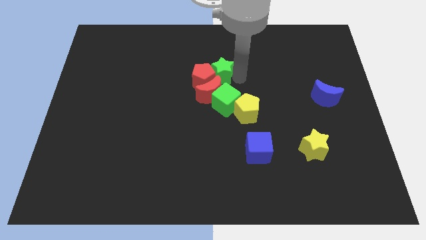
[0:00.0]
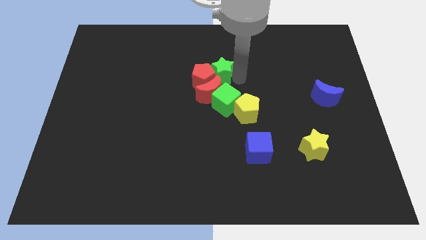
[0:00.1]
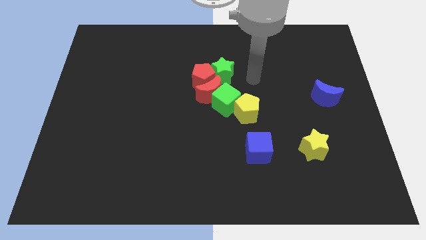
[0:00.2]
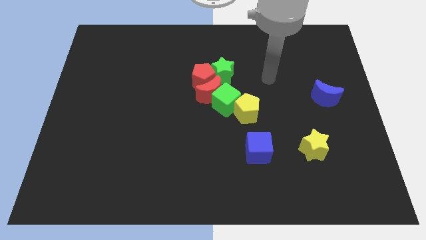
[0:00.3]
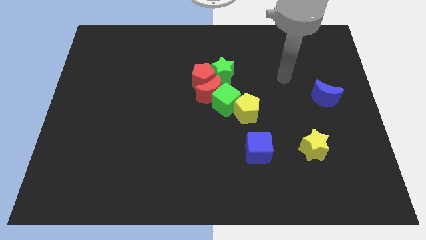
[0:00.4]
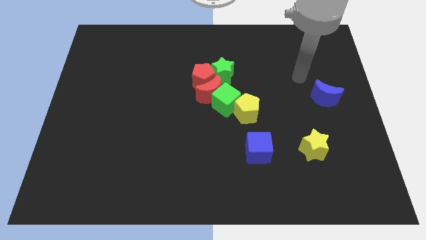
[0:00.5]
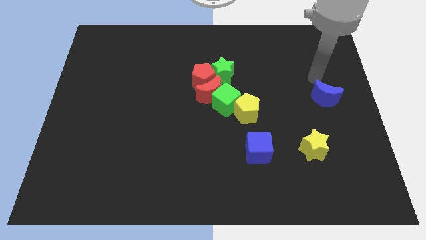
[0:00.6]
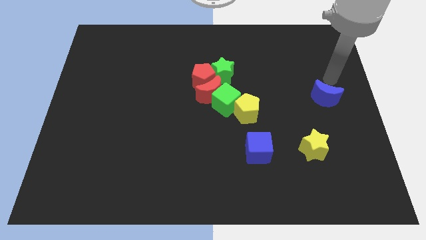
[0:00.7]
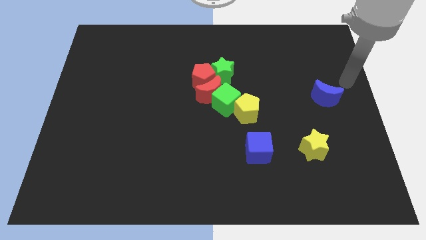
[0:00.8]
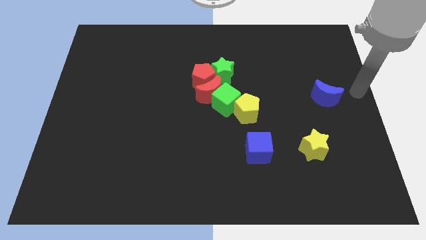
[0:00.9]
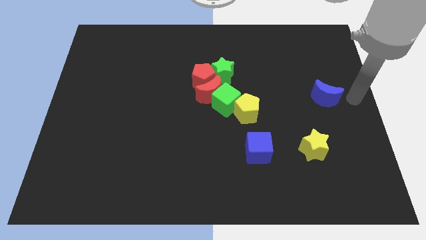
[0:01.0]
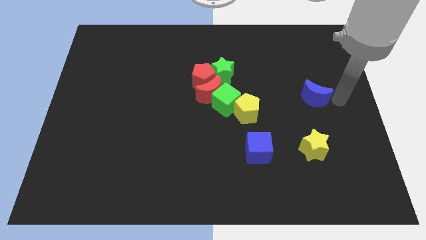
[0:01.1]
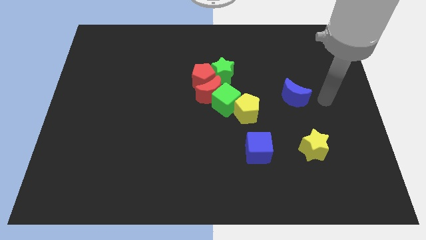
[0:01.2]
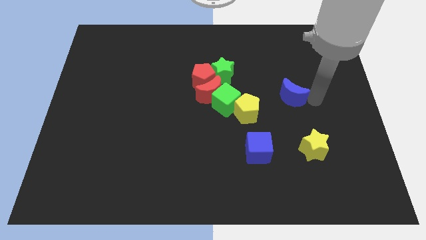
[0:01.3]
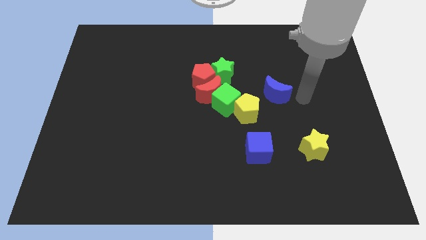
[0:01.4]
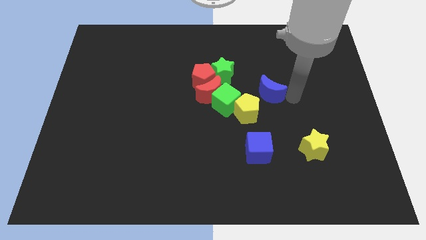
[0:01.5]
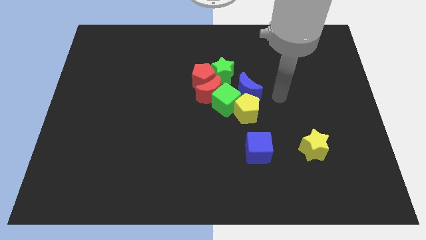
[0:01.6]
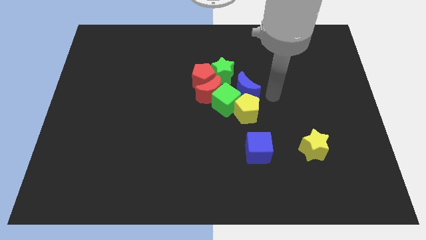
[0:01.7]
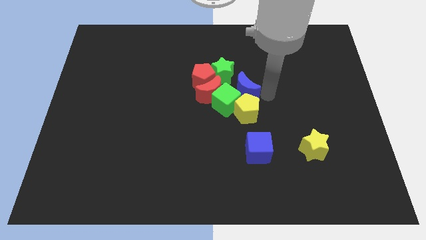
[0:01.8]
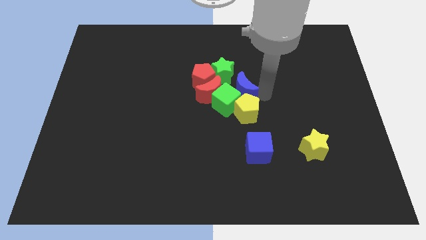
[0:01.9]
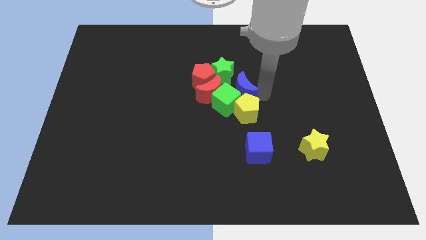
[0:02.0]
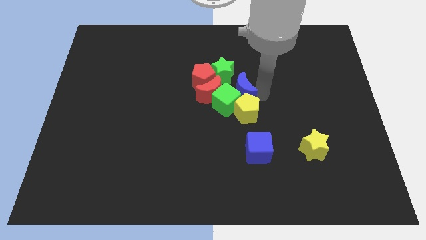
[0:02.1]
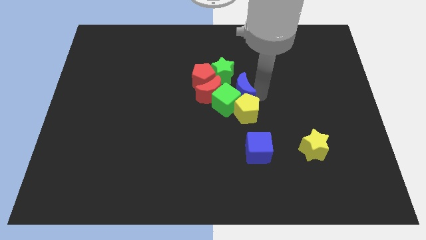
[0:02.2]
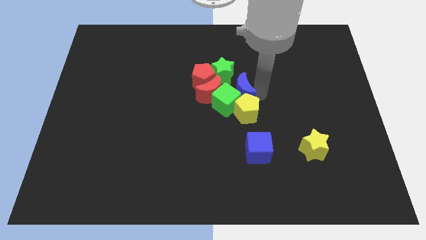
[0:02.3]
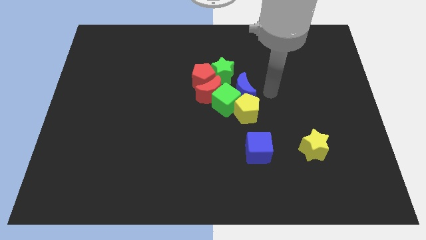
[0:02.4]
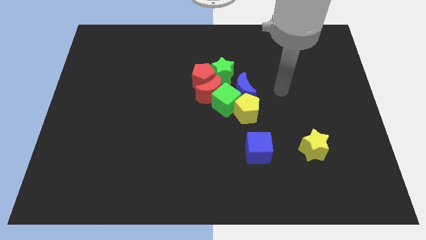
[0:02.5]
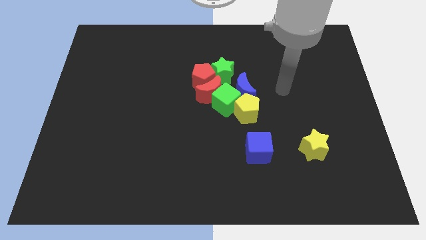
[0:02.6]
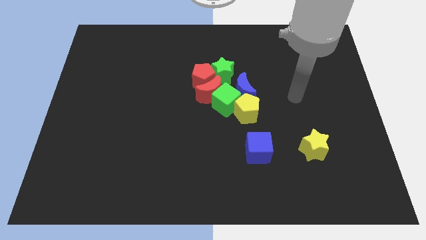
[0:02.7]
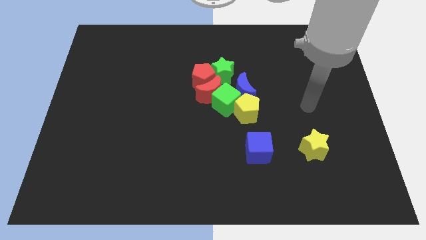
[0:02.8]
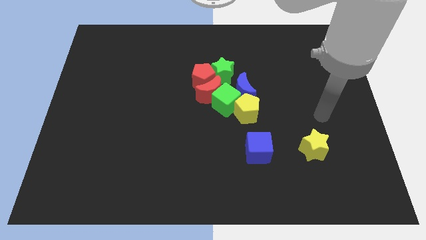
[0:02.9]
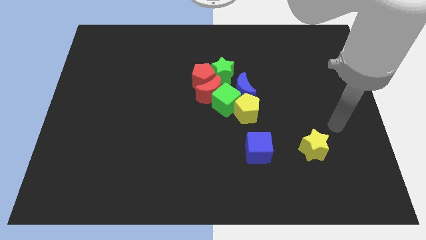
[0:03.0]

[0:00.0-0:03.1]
bring the blue crescent at the top side of the yellow pentagon

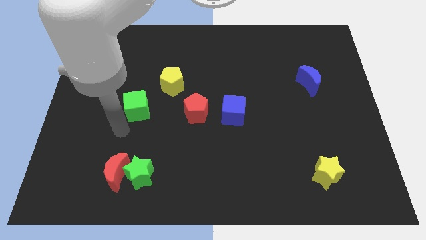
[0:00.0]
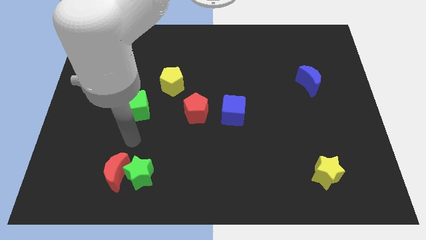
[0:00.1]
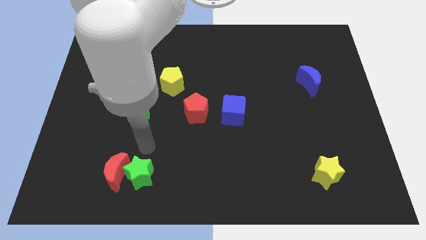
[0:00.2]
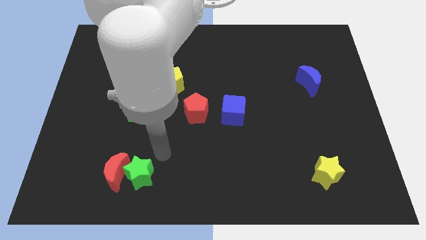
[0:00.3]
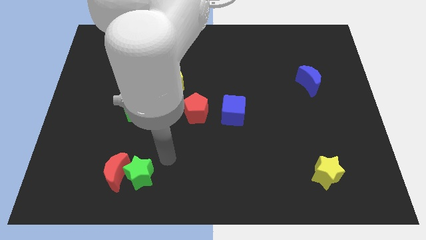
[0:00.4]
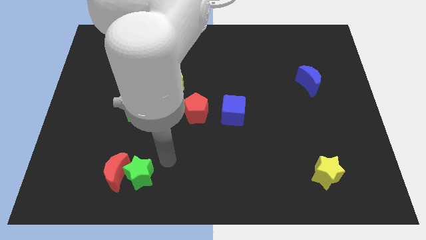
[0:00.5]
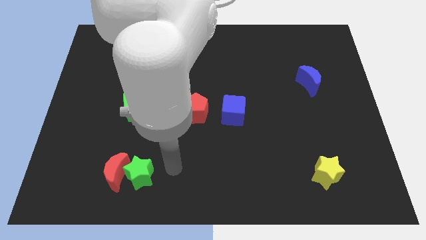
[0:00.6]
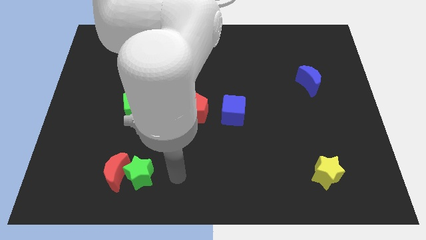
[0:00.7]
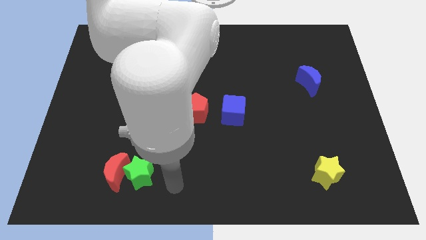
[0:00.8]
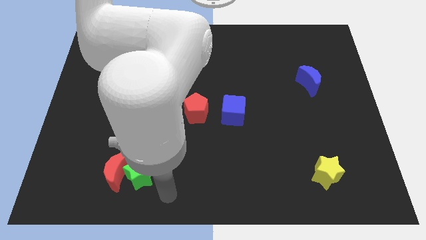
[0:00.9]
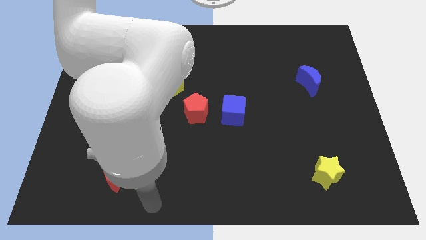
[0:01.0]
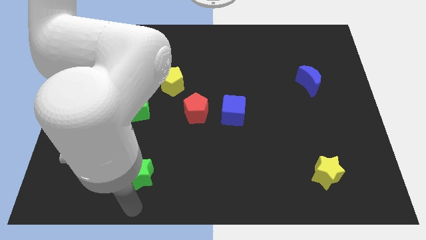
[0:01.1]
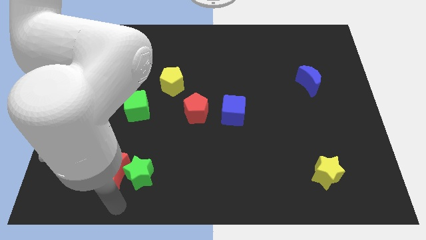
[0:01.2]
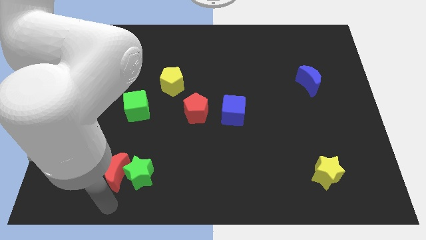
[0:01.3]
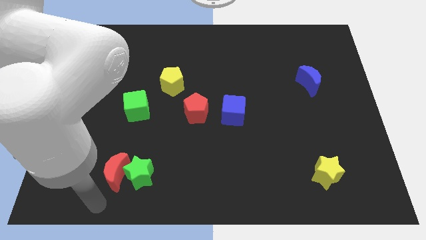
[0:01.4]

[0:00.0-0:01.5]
place your hand under the red crescent

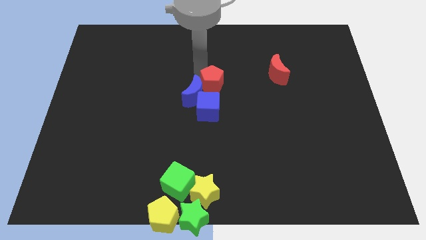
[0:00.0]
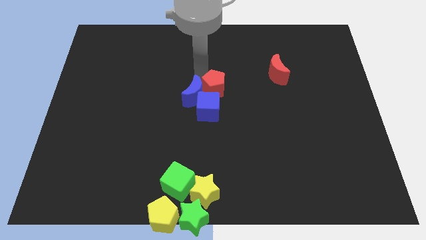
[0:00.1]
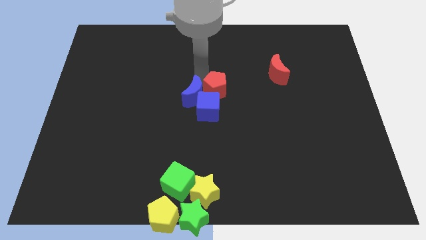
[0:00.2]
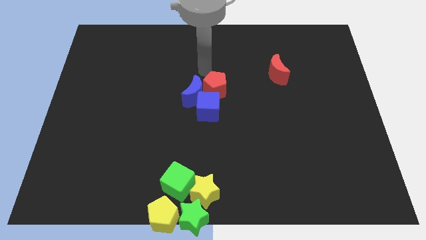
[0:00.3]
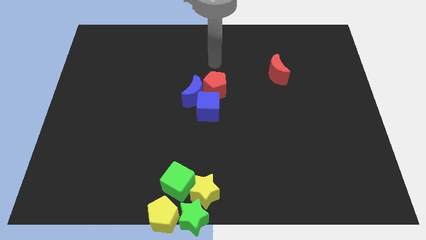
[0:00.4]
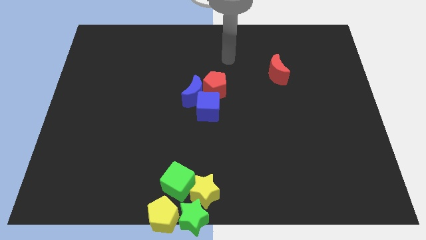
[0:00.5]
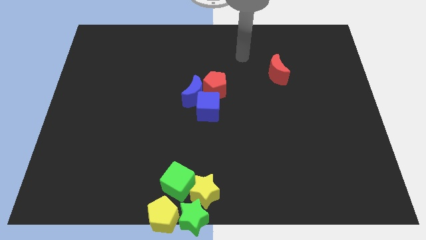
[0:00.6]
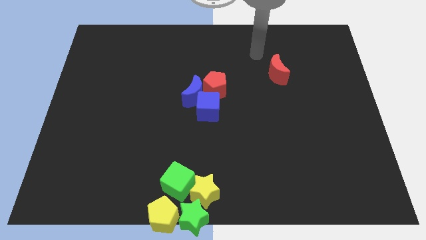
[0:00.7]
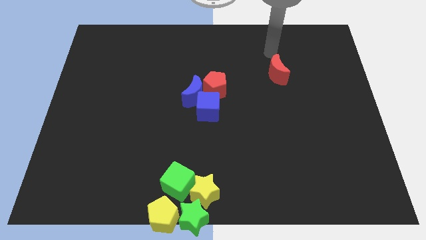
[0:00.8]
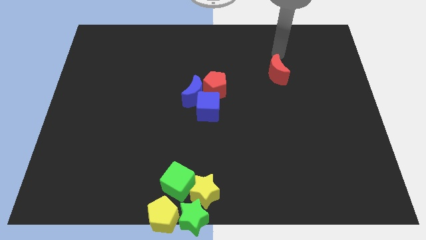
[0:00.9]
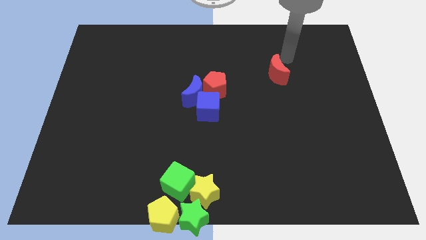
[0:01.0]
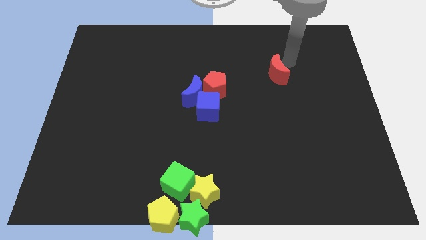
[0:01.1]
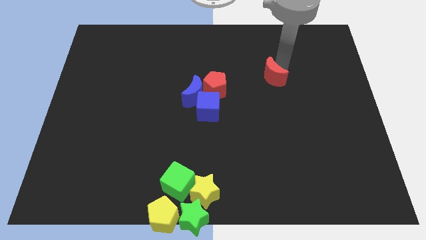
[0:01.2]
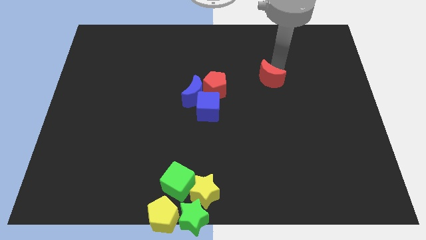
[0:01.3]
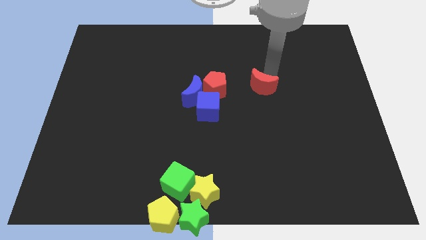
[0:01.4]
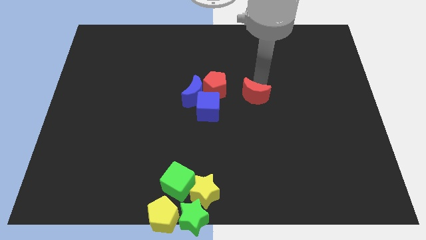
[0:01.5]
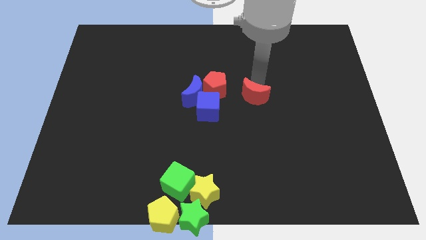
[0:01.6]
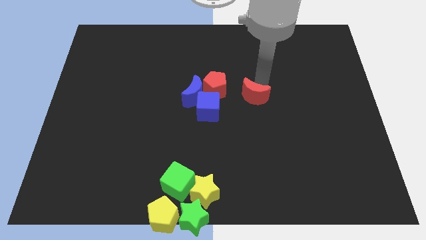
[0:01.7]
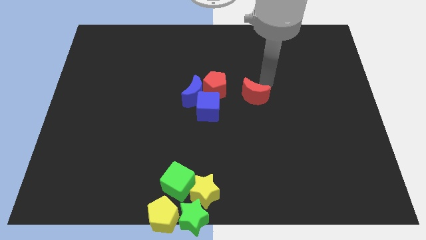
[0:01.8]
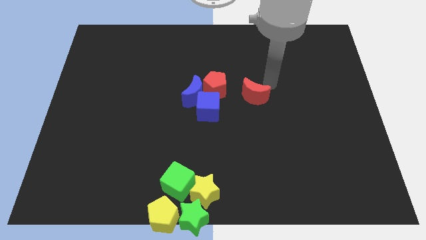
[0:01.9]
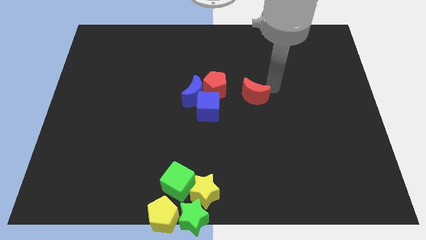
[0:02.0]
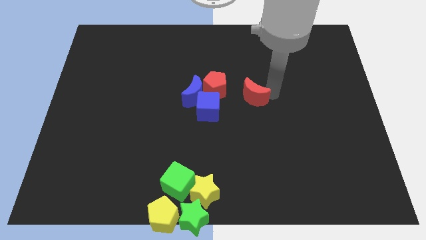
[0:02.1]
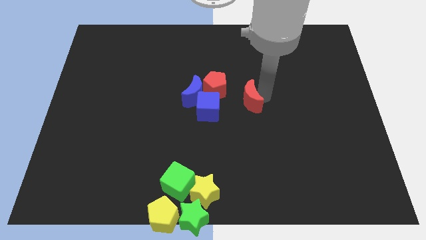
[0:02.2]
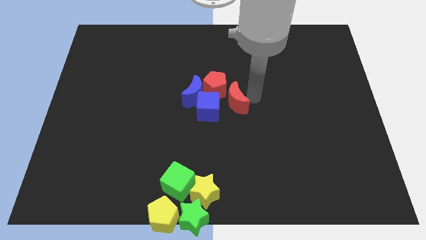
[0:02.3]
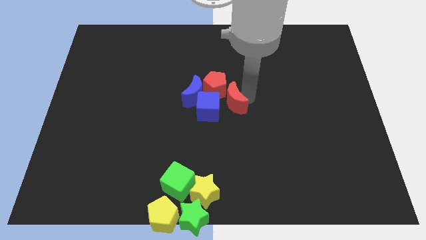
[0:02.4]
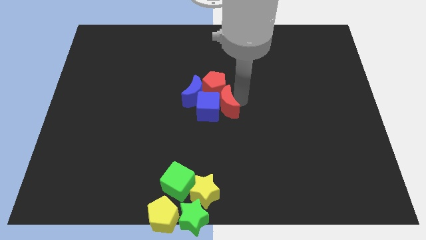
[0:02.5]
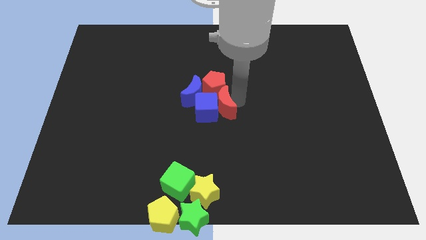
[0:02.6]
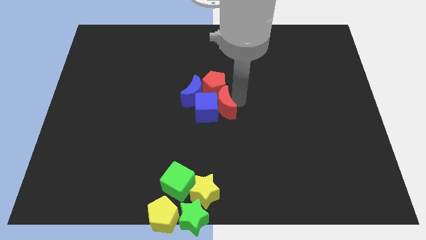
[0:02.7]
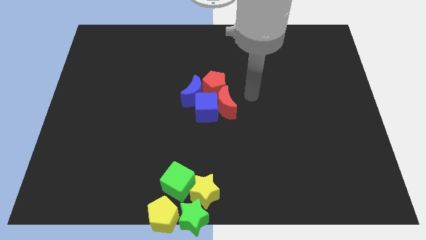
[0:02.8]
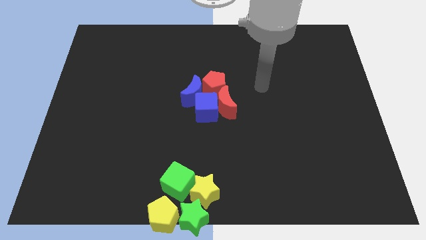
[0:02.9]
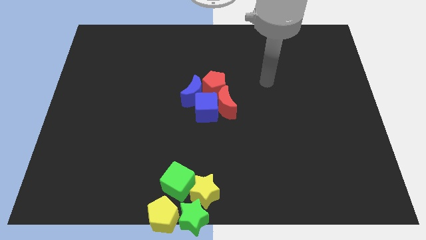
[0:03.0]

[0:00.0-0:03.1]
push the red moon to the right side of blue cube

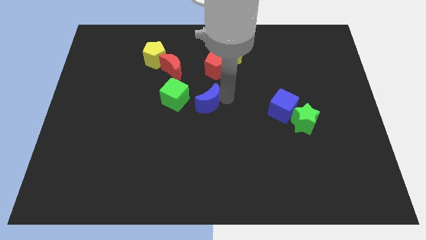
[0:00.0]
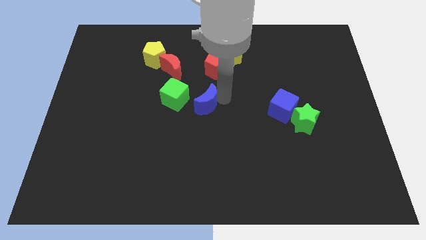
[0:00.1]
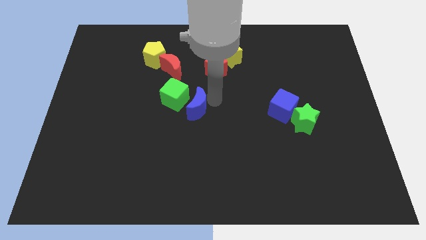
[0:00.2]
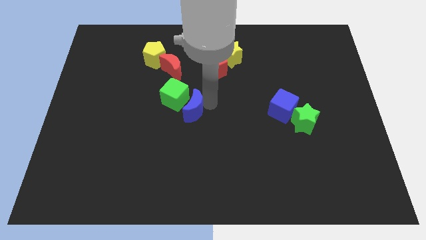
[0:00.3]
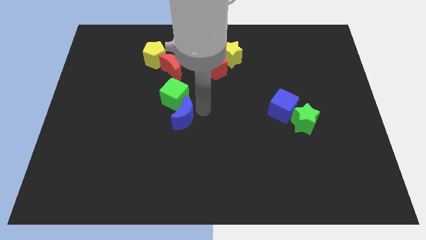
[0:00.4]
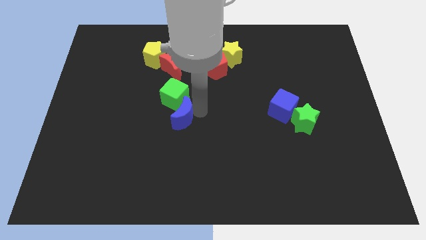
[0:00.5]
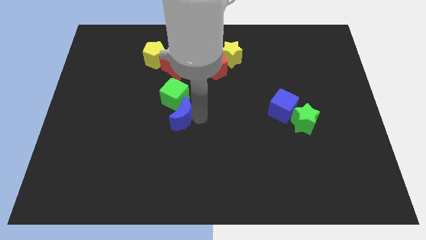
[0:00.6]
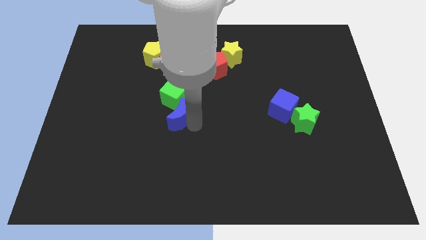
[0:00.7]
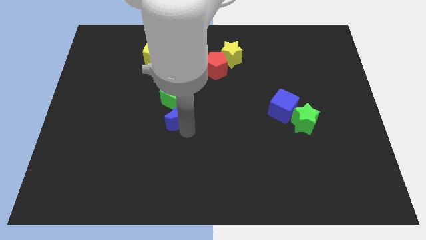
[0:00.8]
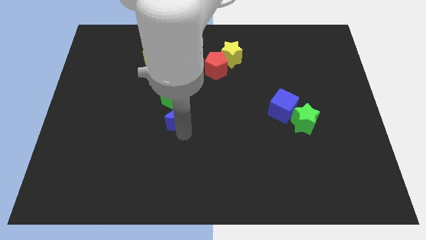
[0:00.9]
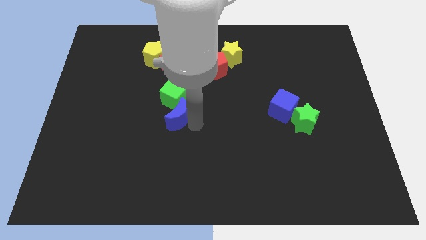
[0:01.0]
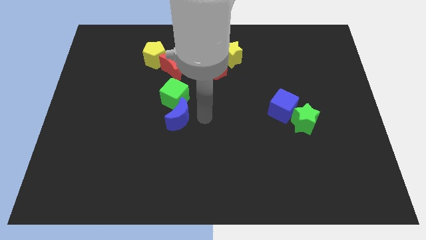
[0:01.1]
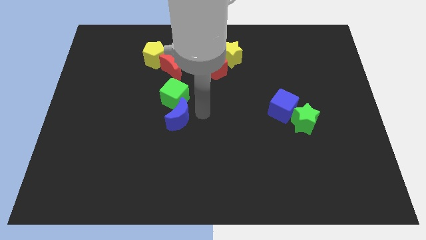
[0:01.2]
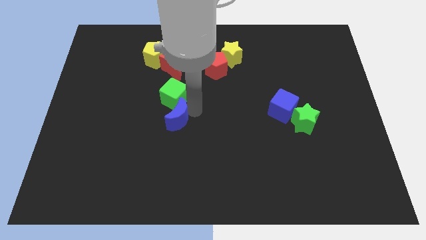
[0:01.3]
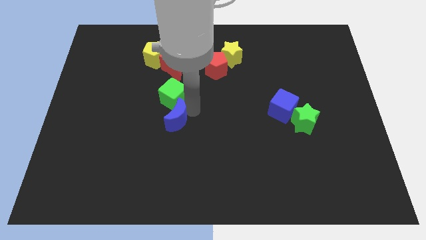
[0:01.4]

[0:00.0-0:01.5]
place the blue crescent to the bottom of the green cube
